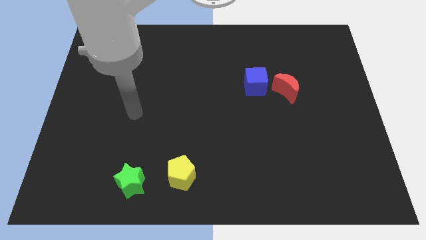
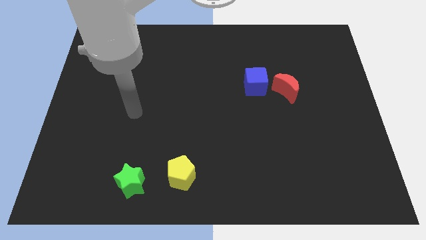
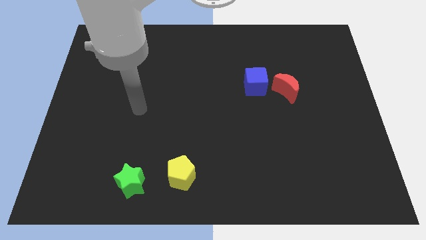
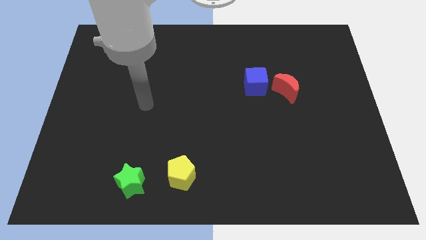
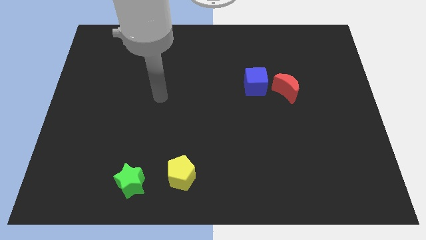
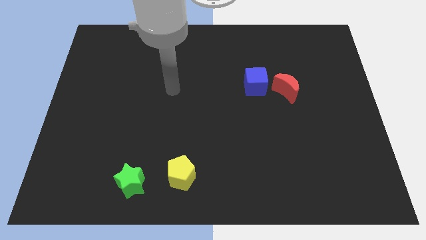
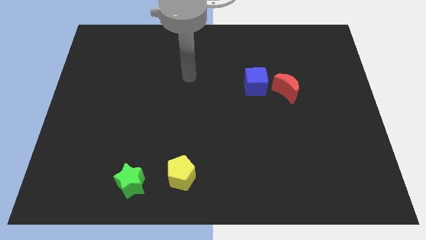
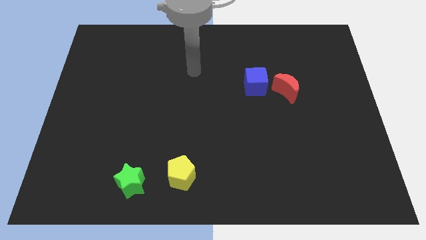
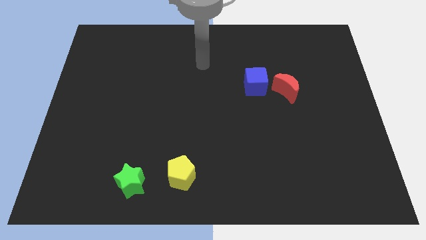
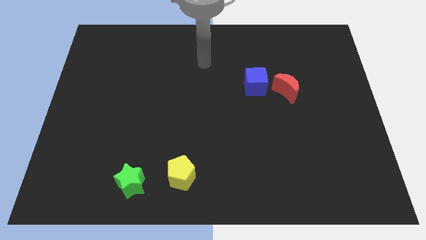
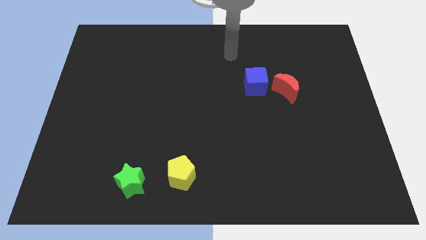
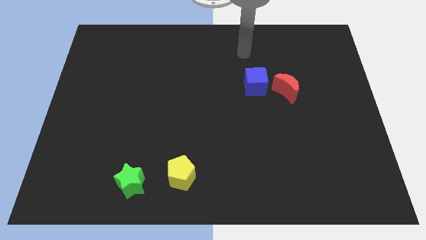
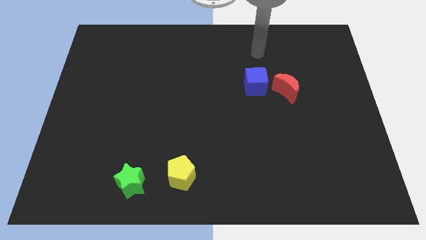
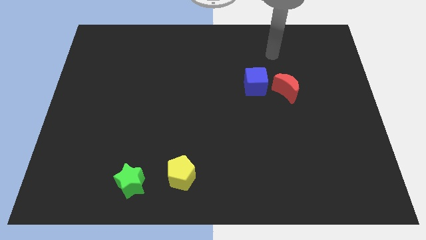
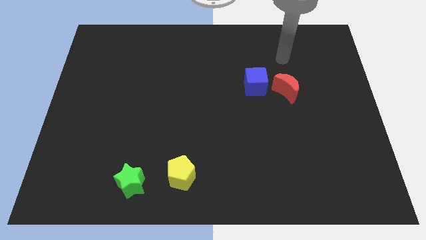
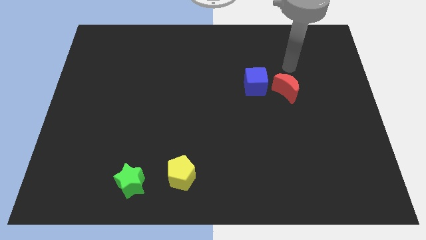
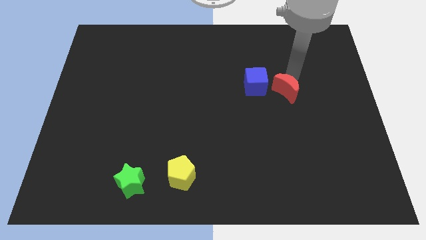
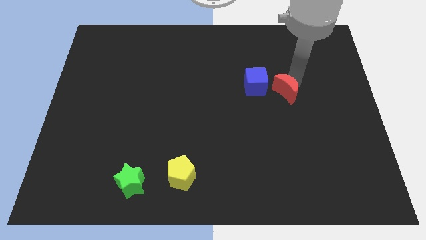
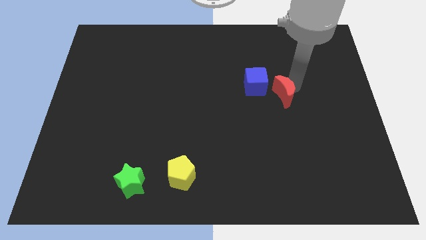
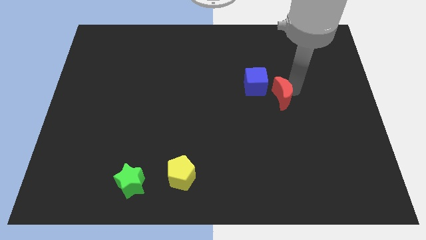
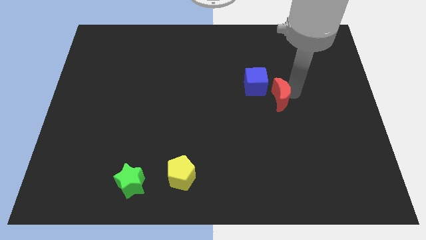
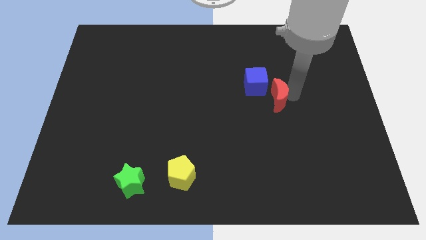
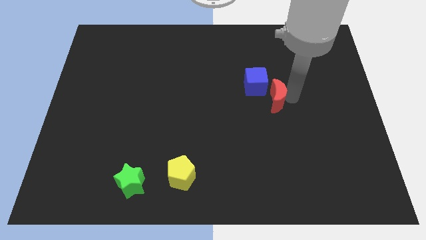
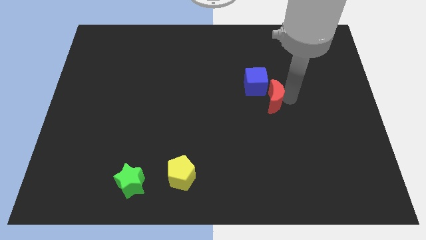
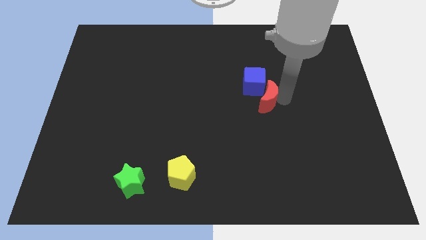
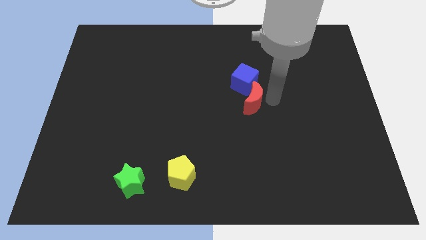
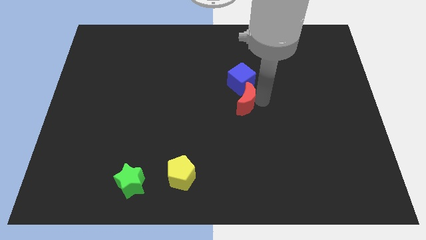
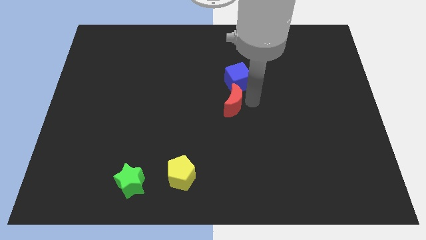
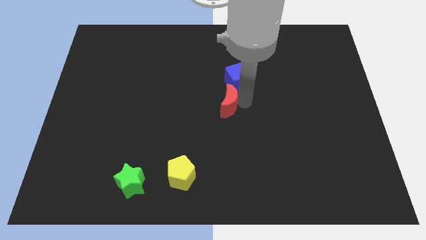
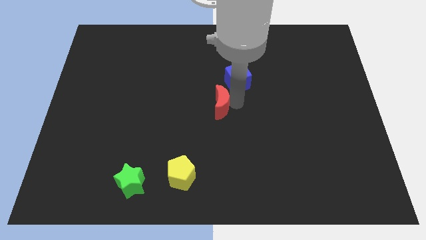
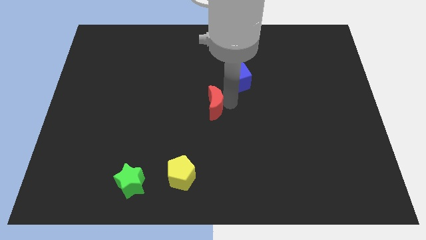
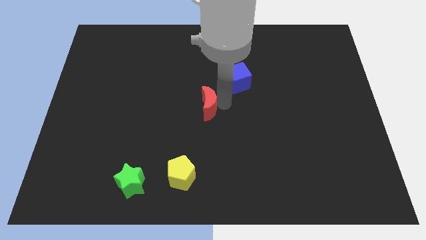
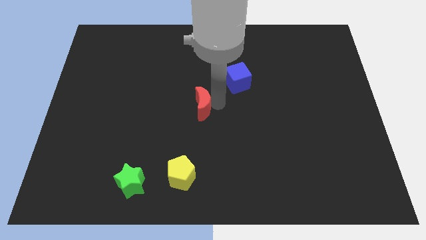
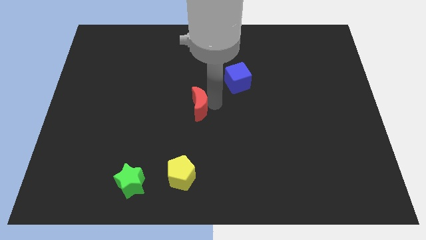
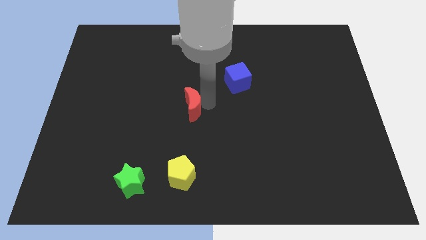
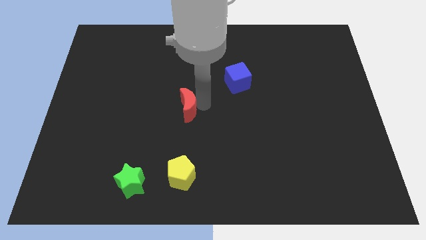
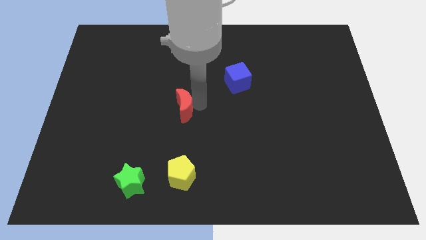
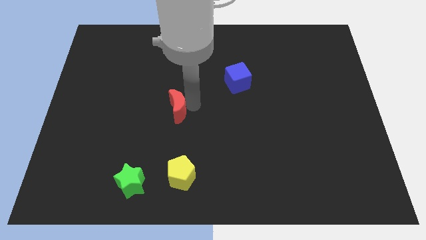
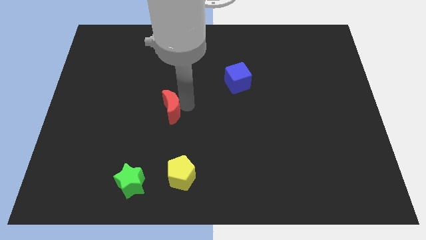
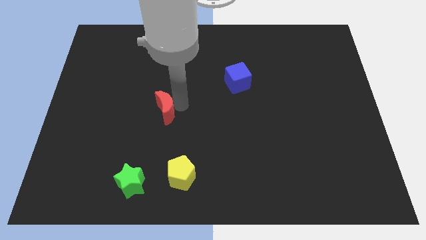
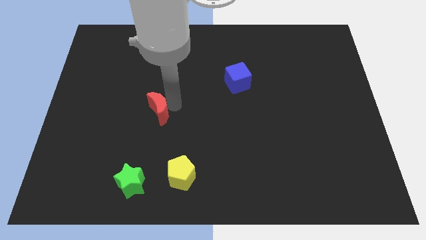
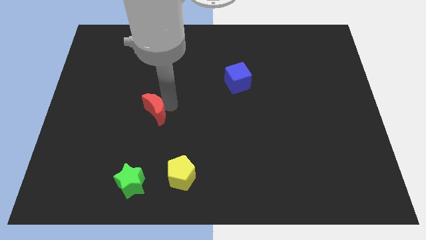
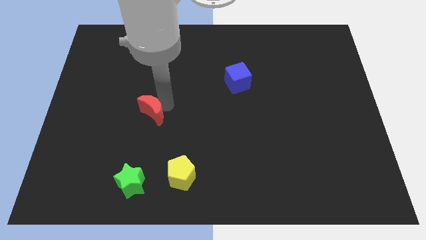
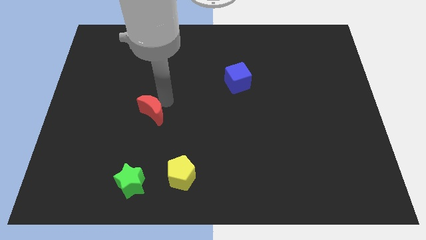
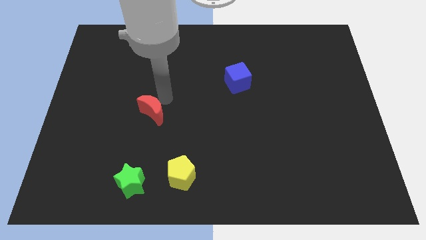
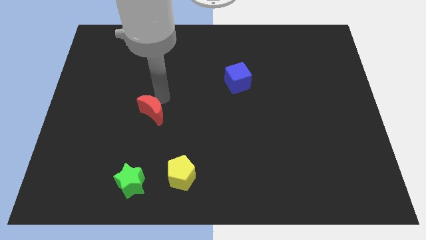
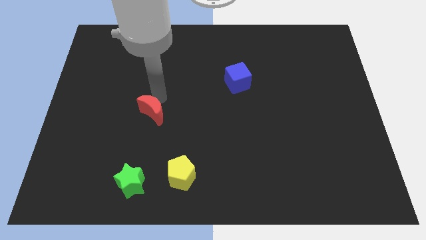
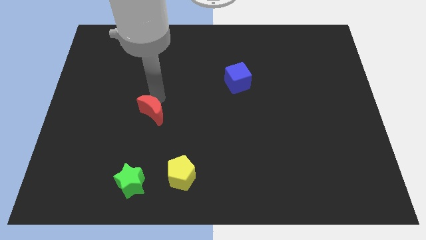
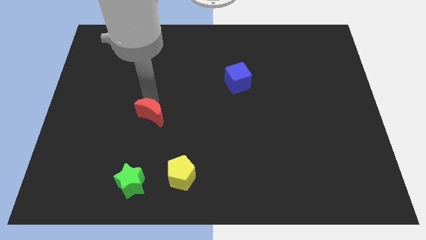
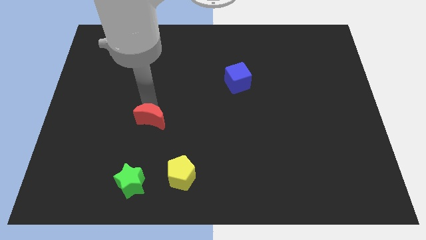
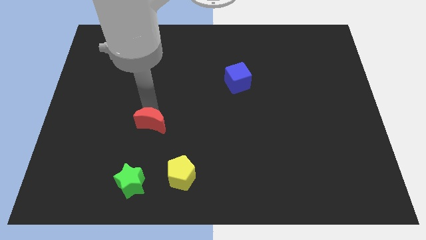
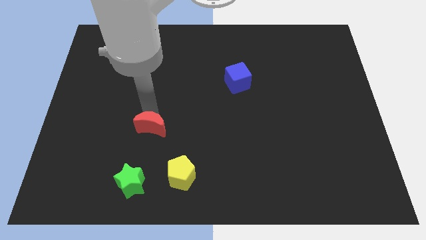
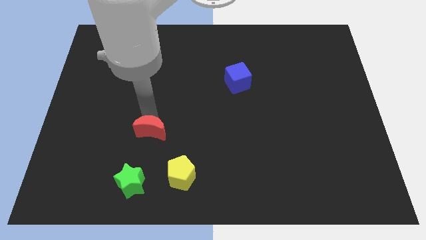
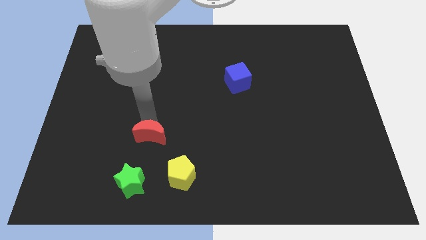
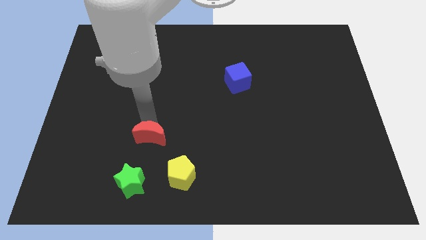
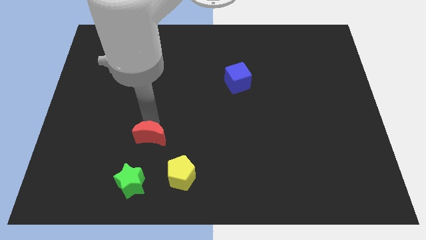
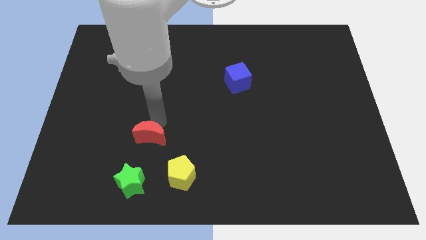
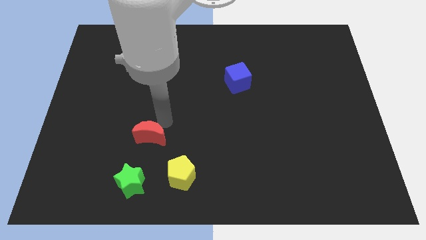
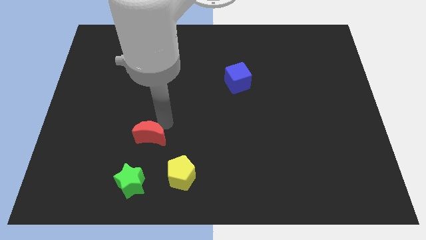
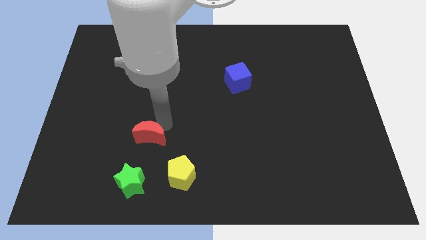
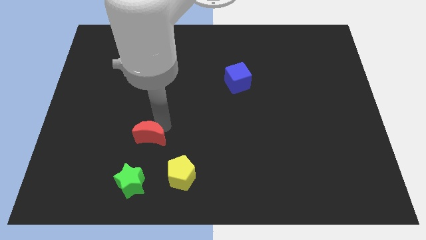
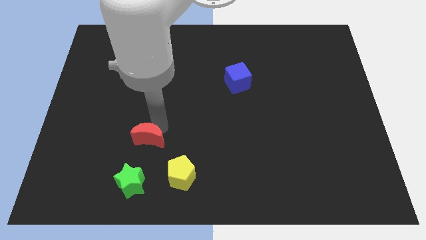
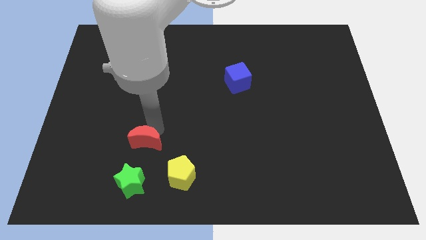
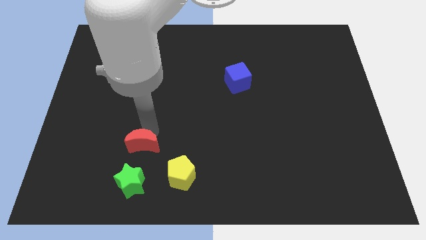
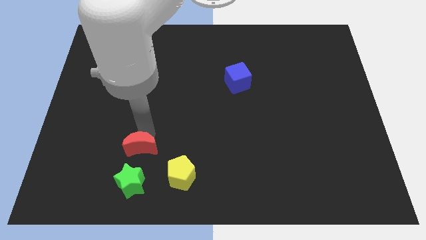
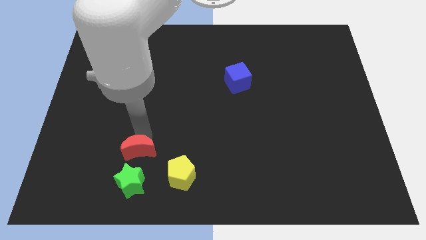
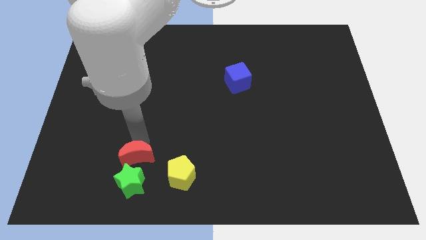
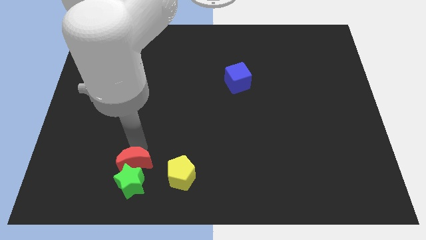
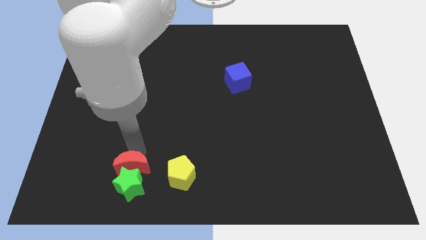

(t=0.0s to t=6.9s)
move the red block close to the green star

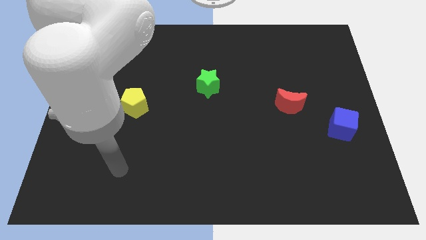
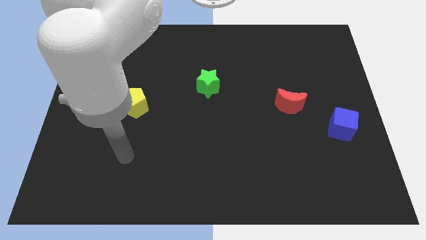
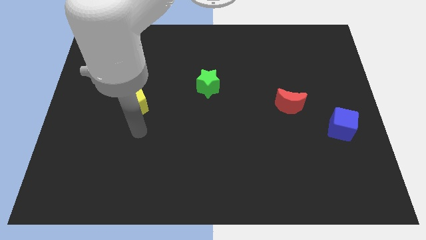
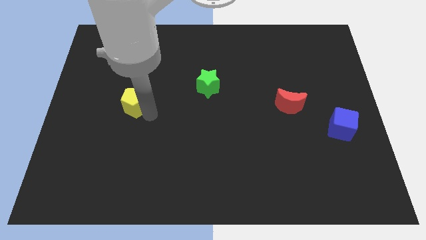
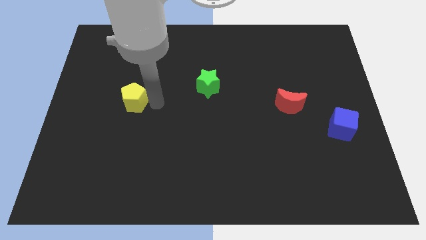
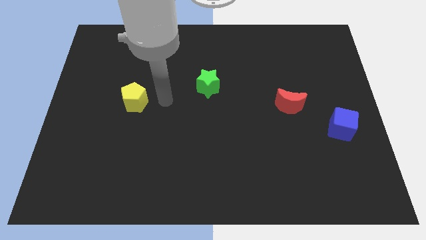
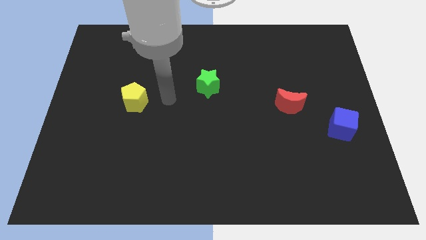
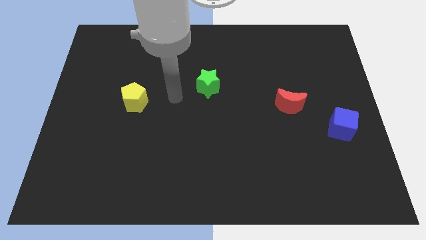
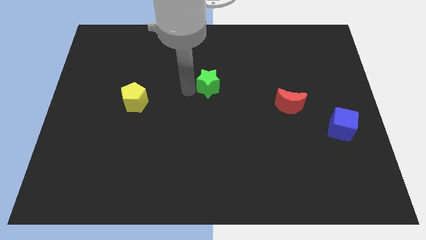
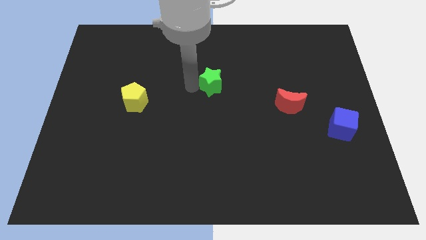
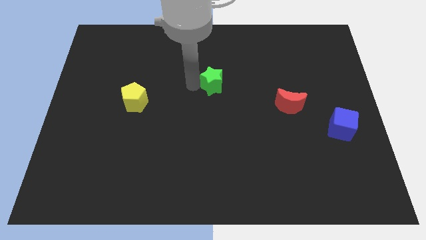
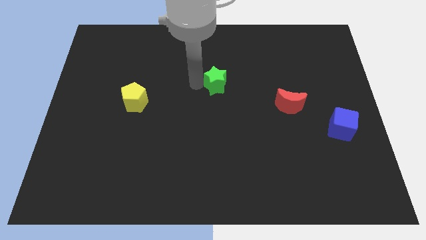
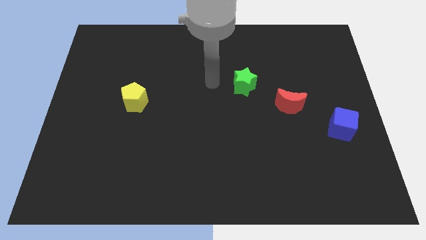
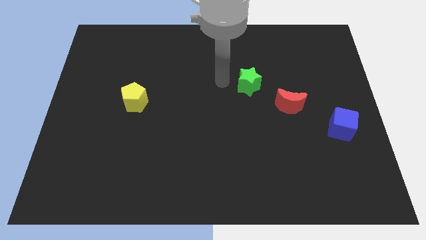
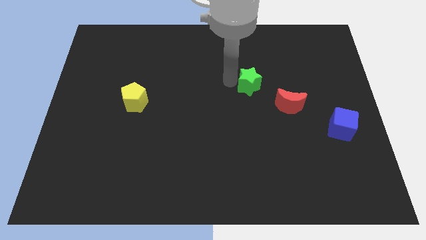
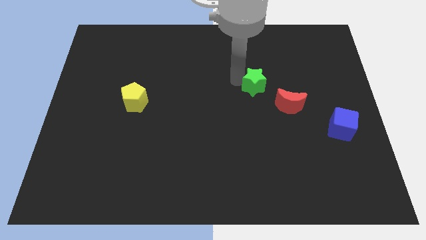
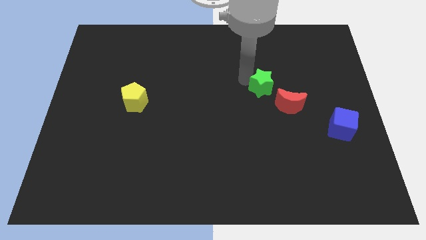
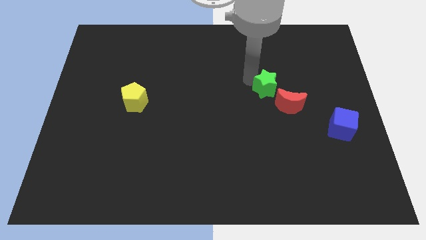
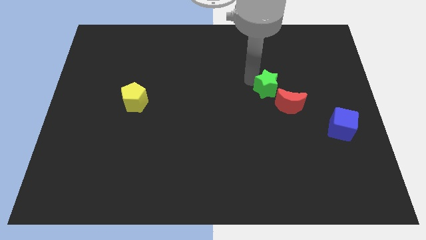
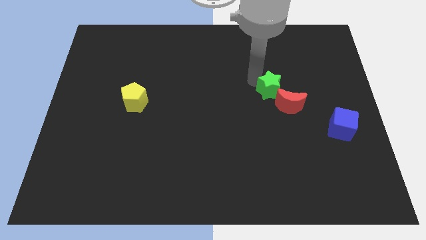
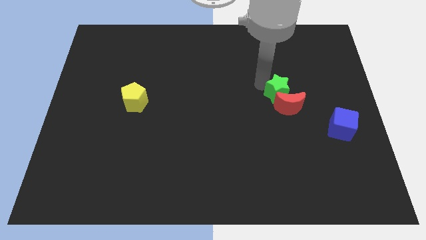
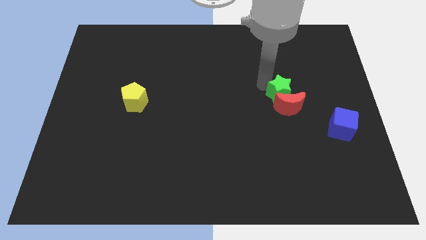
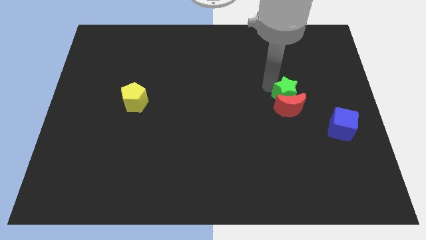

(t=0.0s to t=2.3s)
slide the green star towards the red moon
